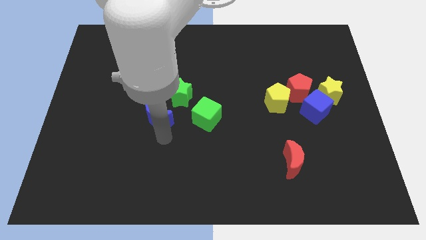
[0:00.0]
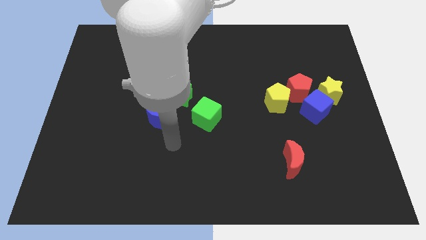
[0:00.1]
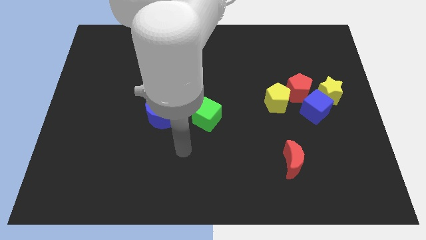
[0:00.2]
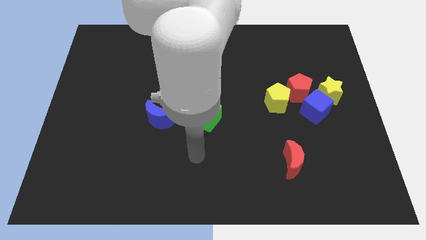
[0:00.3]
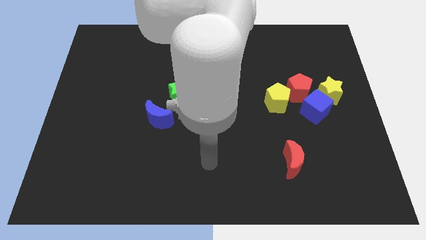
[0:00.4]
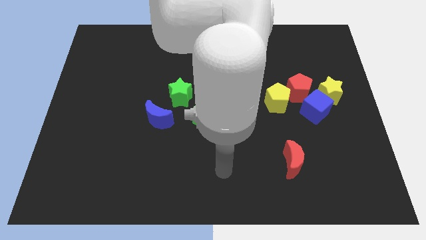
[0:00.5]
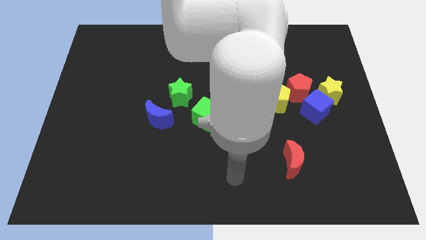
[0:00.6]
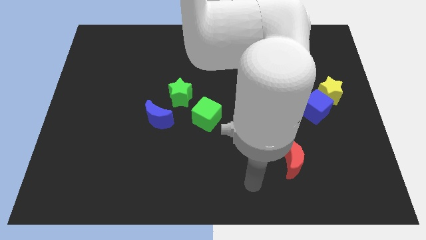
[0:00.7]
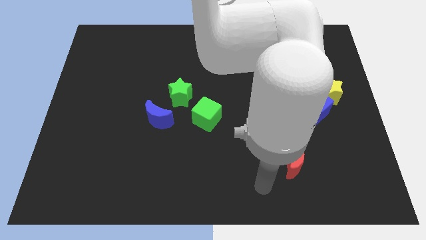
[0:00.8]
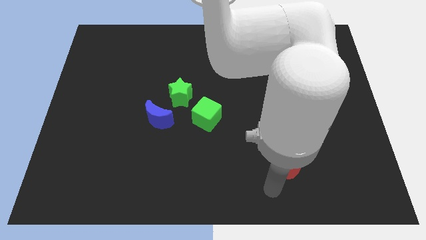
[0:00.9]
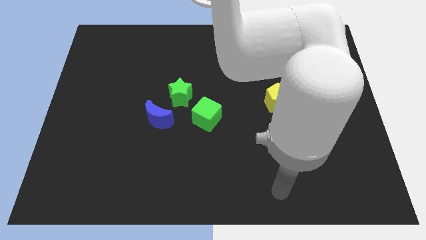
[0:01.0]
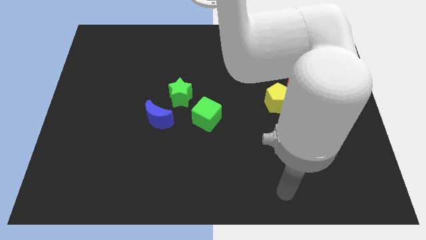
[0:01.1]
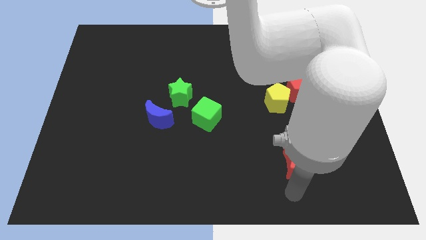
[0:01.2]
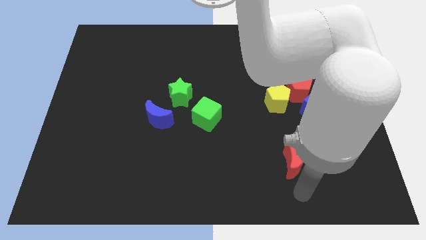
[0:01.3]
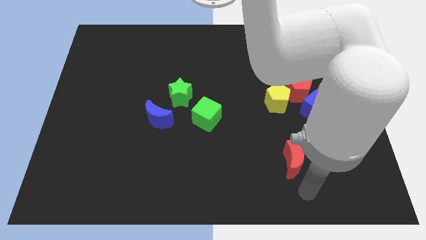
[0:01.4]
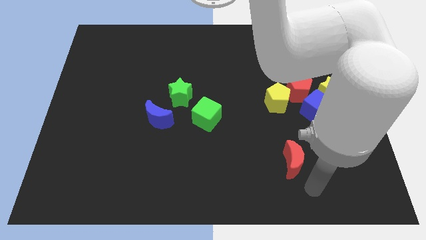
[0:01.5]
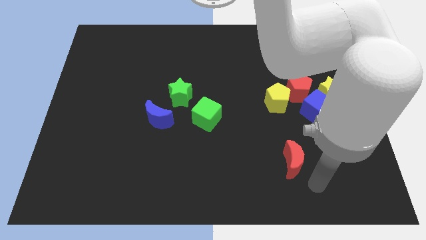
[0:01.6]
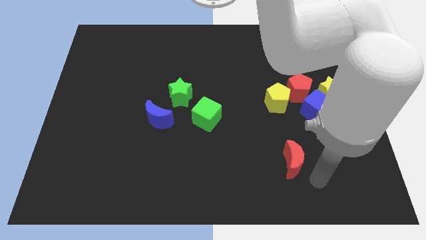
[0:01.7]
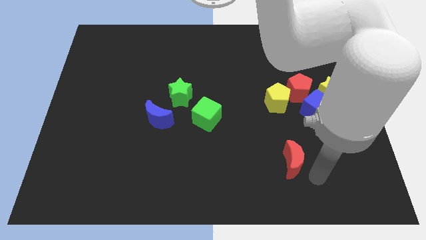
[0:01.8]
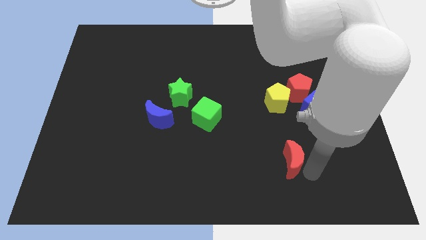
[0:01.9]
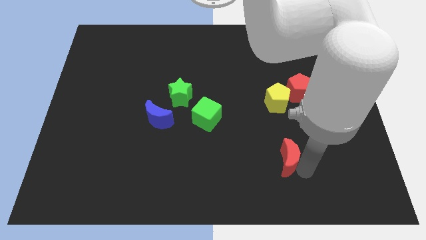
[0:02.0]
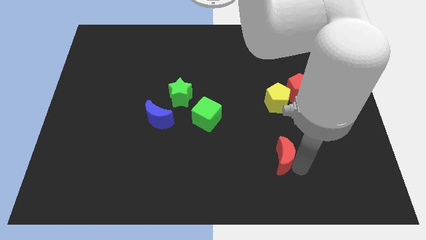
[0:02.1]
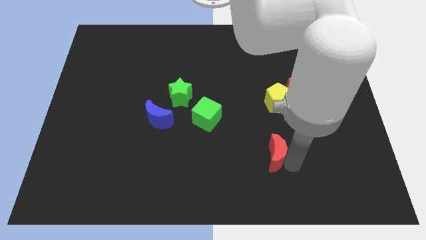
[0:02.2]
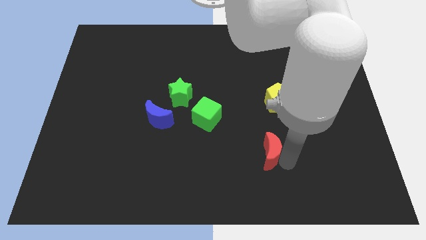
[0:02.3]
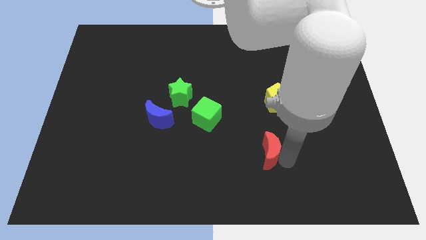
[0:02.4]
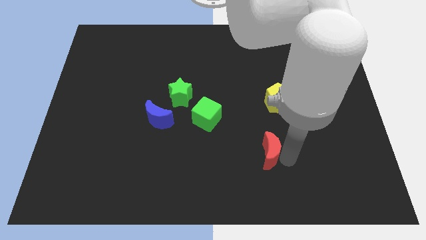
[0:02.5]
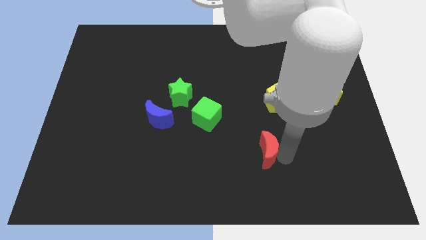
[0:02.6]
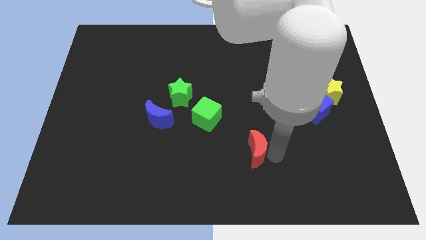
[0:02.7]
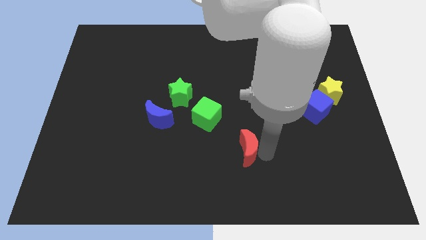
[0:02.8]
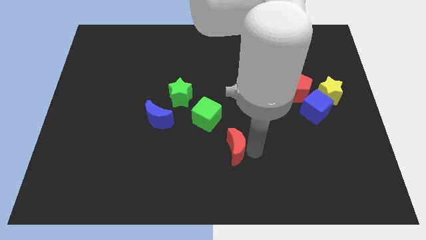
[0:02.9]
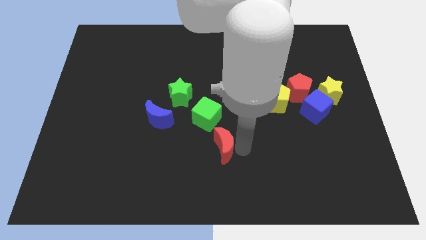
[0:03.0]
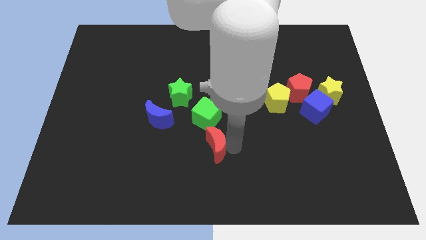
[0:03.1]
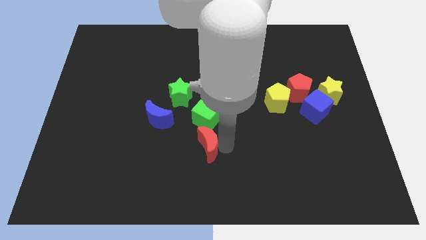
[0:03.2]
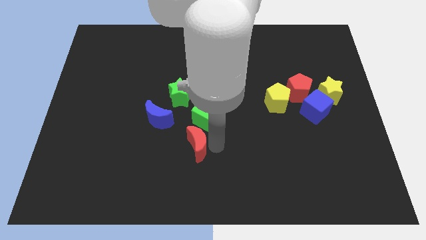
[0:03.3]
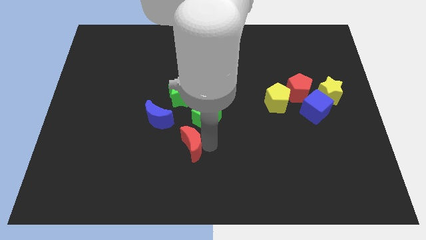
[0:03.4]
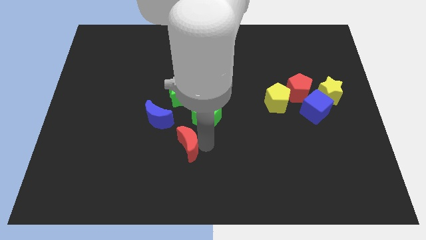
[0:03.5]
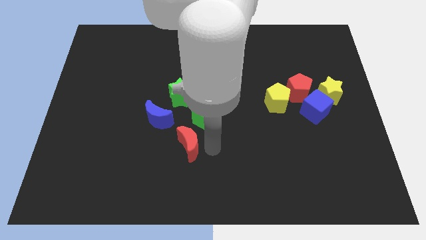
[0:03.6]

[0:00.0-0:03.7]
push the red crescent vertically to the green star

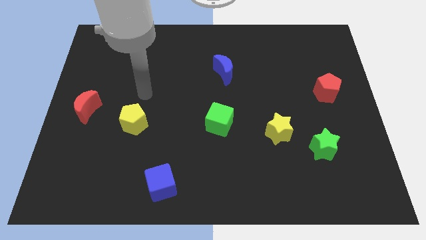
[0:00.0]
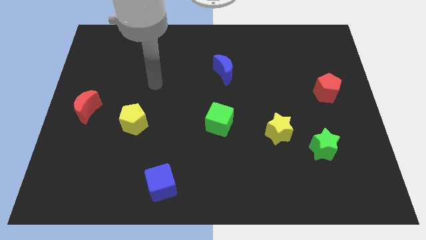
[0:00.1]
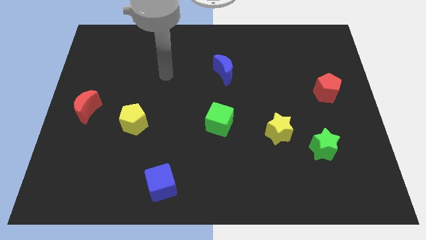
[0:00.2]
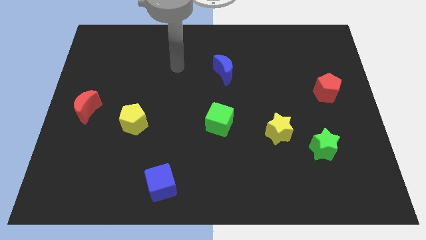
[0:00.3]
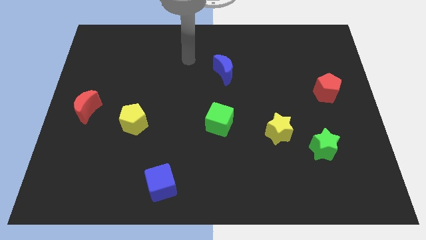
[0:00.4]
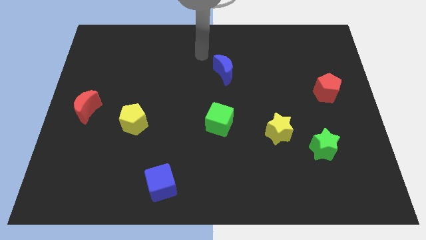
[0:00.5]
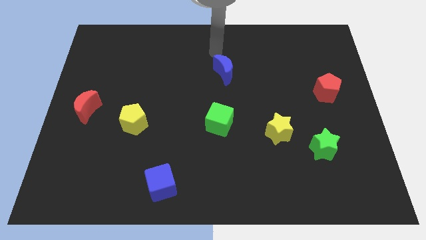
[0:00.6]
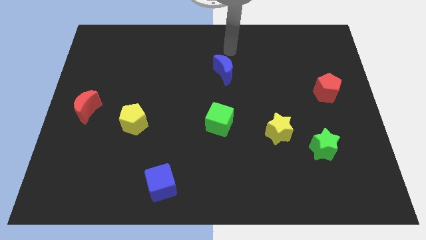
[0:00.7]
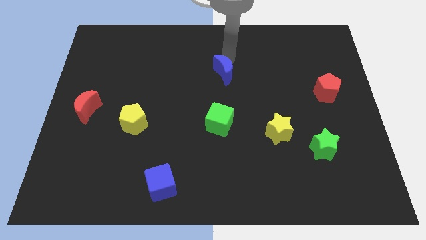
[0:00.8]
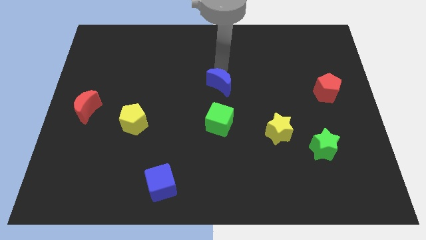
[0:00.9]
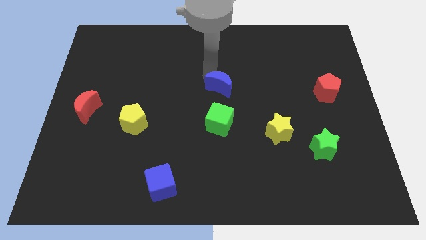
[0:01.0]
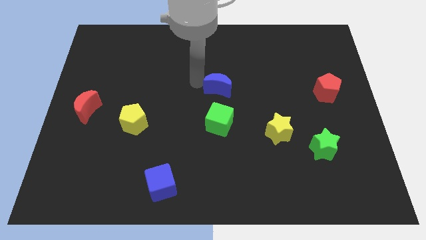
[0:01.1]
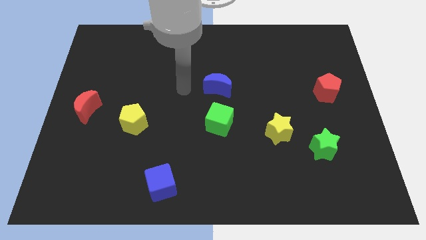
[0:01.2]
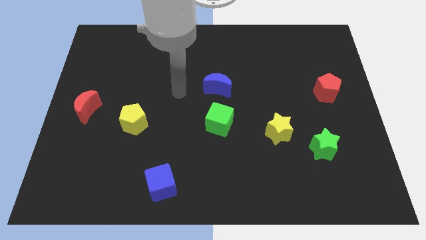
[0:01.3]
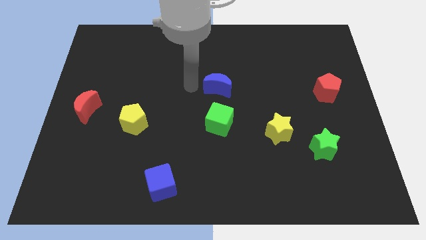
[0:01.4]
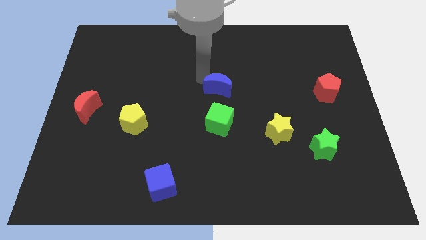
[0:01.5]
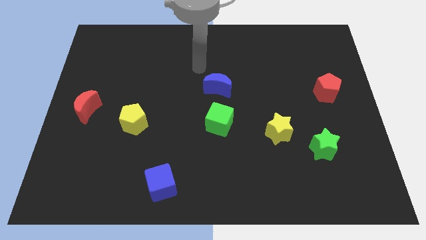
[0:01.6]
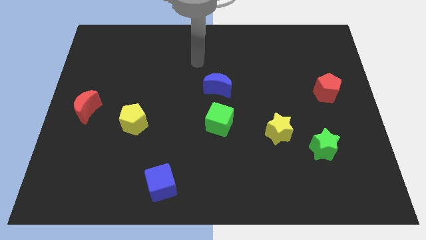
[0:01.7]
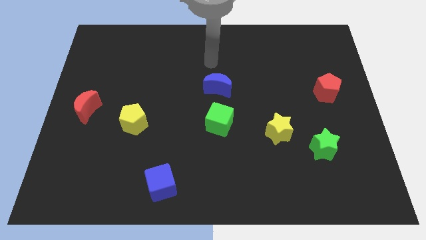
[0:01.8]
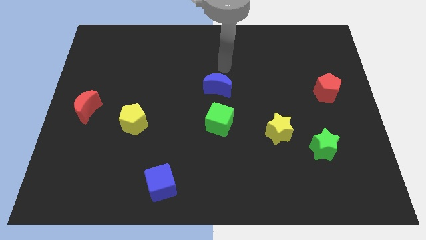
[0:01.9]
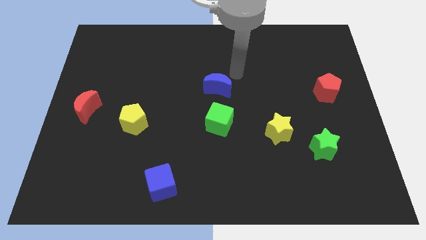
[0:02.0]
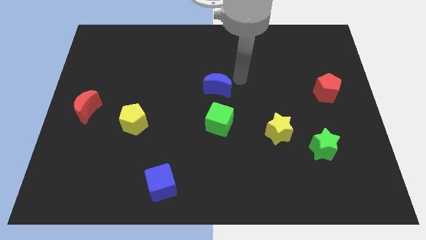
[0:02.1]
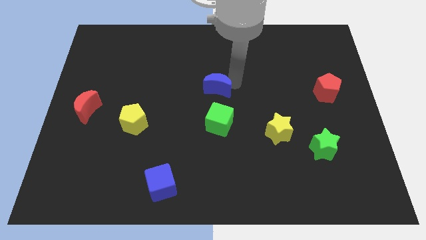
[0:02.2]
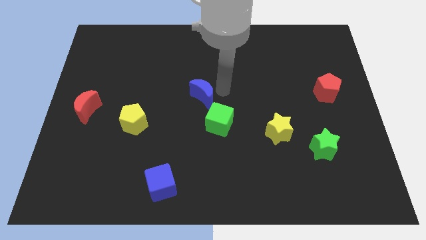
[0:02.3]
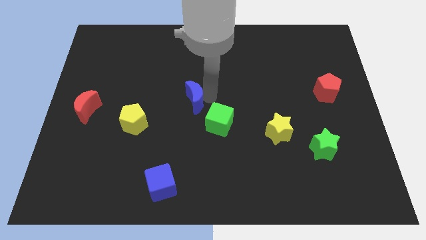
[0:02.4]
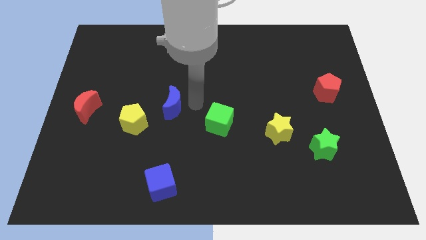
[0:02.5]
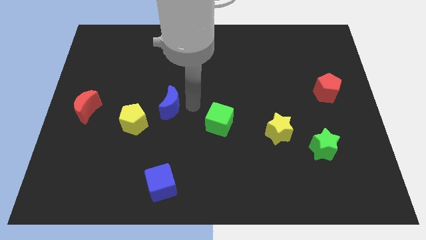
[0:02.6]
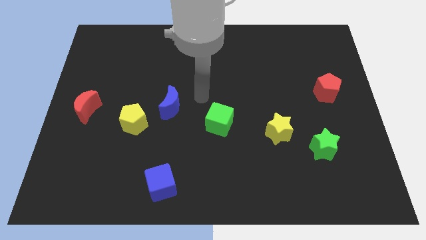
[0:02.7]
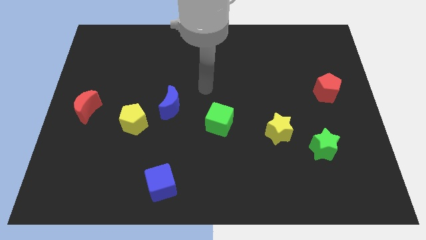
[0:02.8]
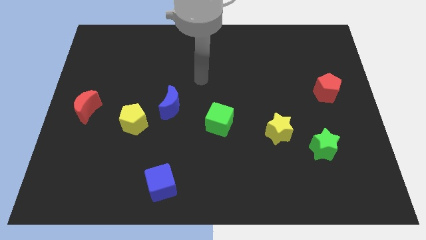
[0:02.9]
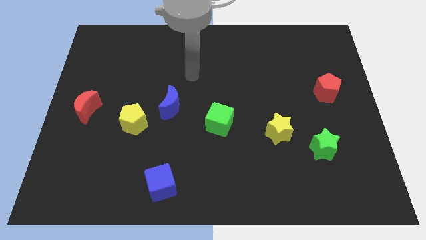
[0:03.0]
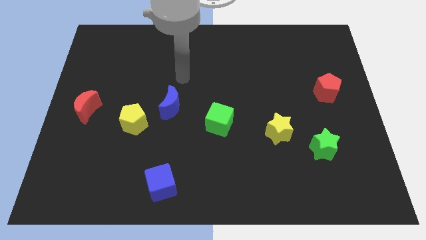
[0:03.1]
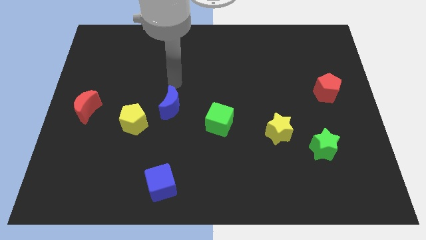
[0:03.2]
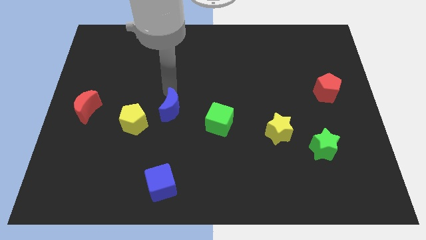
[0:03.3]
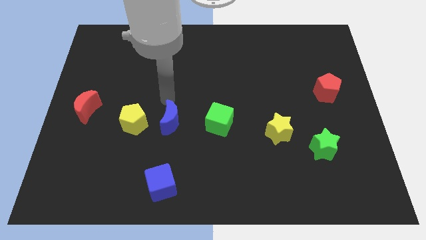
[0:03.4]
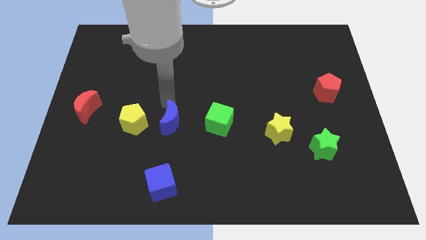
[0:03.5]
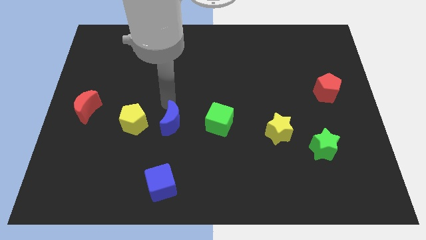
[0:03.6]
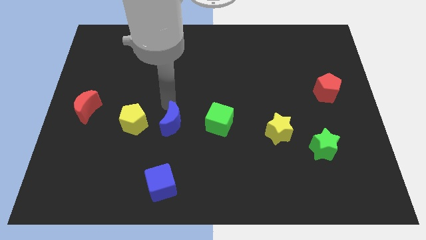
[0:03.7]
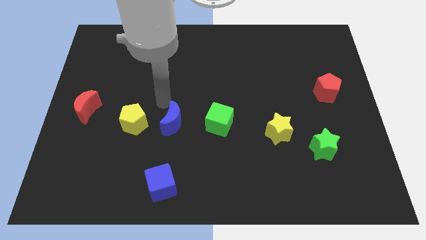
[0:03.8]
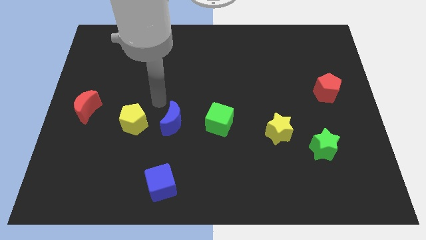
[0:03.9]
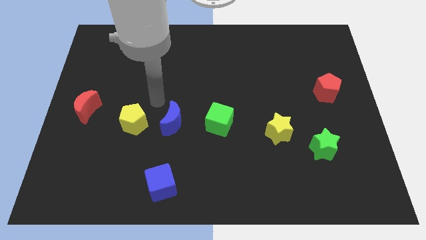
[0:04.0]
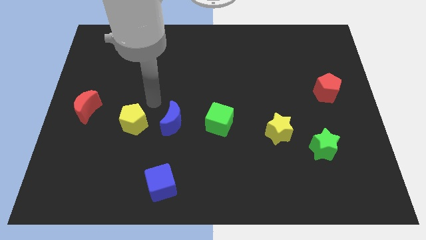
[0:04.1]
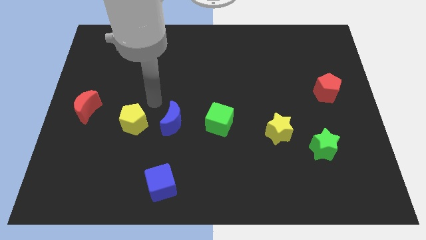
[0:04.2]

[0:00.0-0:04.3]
place blue moon in between yellow pentagon and green cube

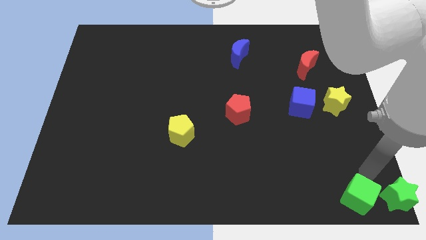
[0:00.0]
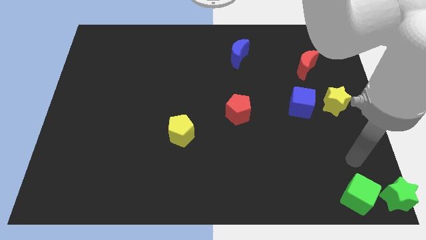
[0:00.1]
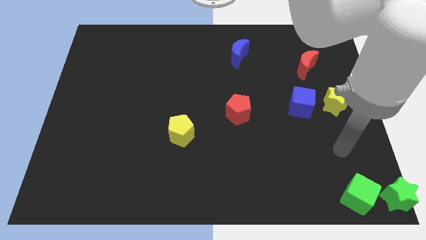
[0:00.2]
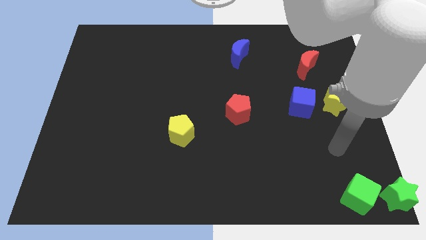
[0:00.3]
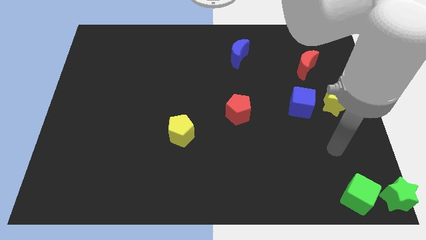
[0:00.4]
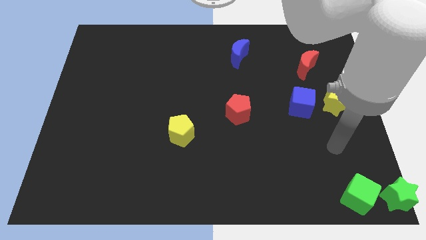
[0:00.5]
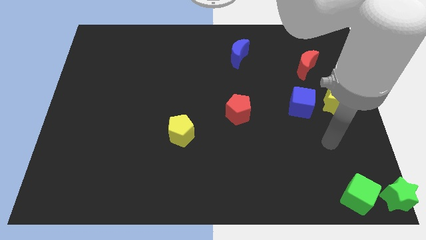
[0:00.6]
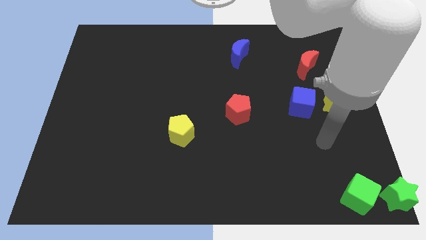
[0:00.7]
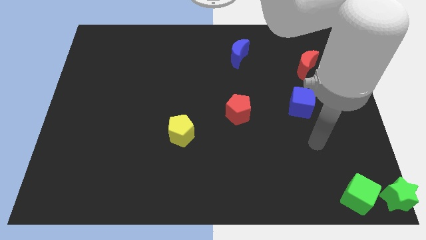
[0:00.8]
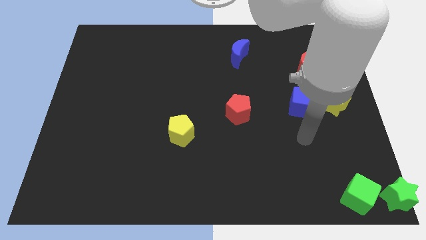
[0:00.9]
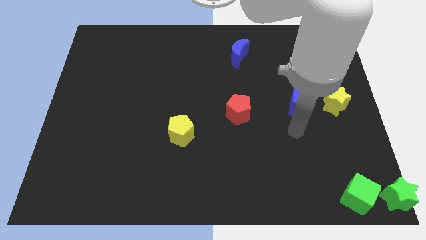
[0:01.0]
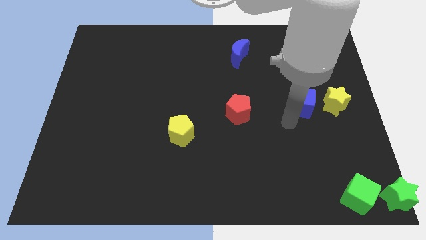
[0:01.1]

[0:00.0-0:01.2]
place your hand close to the blue cube
